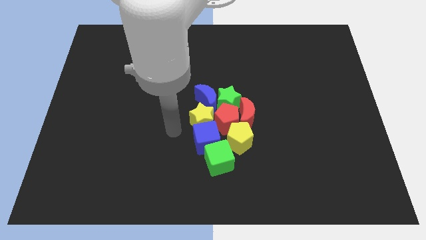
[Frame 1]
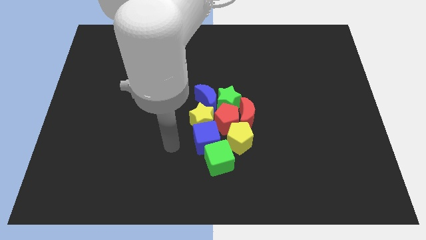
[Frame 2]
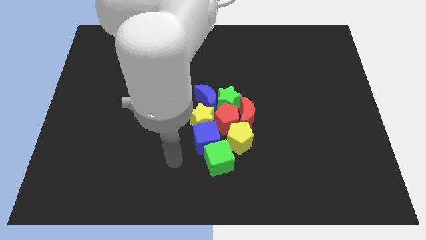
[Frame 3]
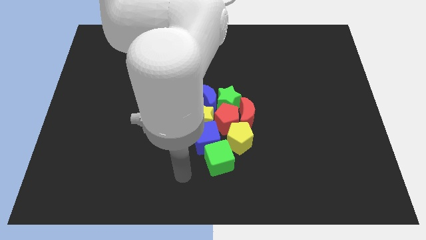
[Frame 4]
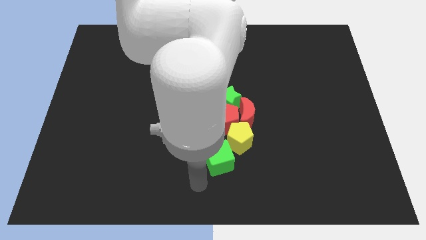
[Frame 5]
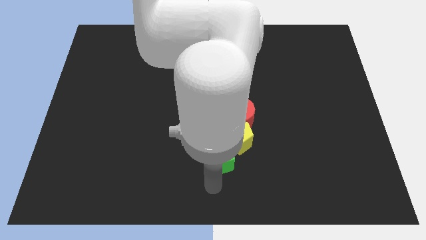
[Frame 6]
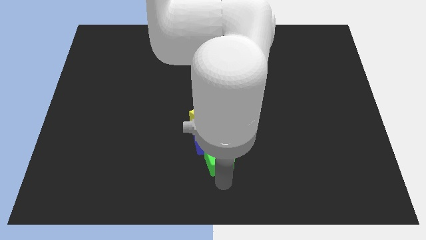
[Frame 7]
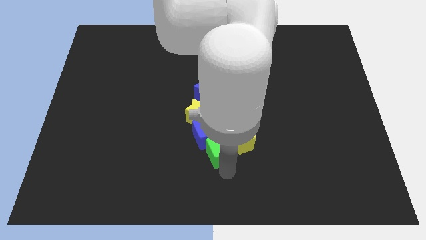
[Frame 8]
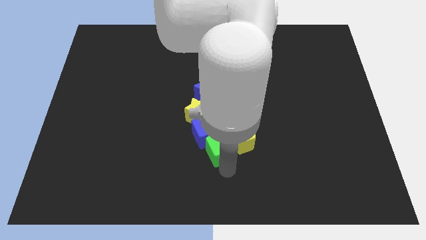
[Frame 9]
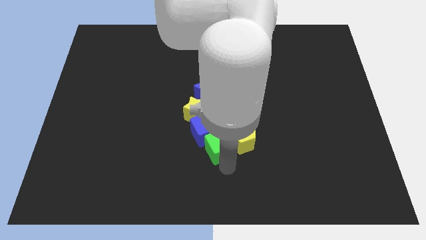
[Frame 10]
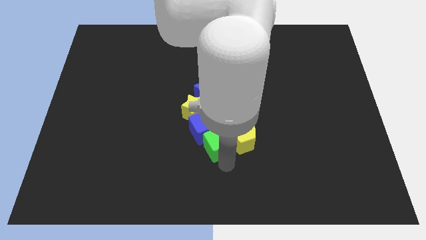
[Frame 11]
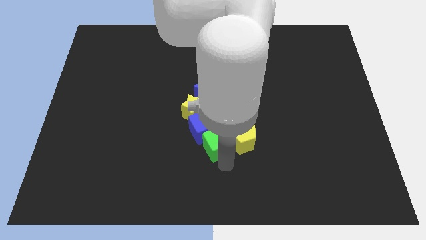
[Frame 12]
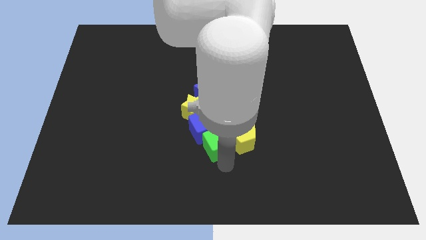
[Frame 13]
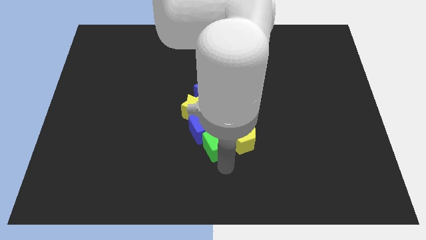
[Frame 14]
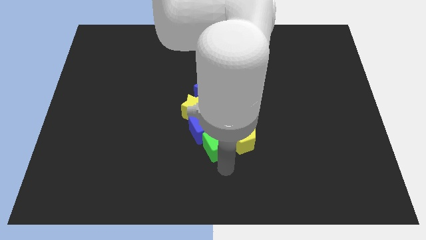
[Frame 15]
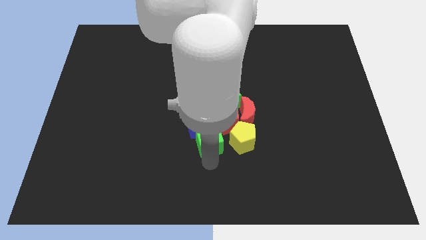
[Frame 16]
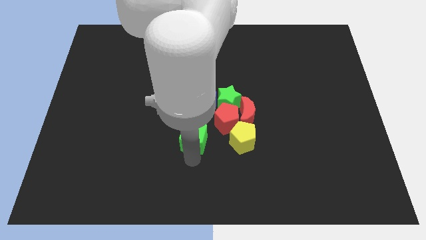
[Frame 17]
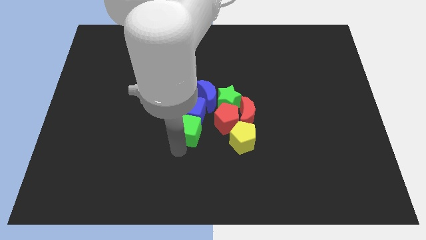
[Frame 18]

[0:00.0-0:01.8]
move the green cube into blue cube

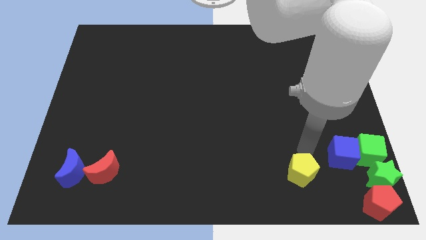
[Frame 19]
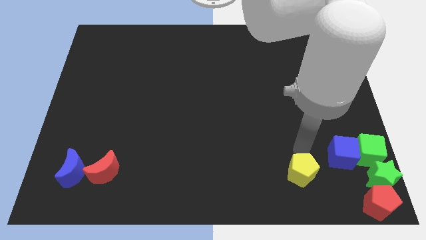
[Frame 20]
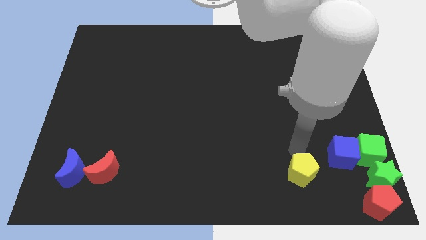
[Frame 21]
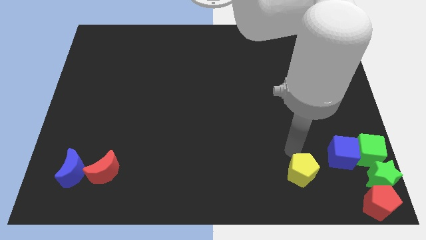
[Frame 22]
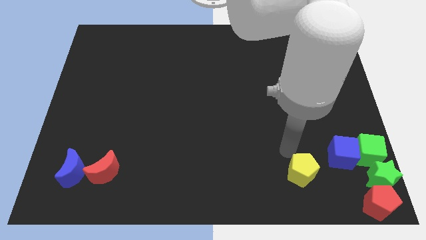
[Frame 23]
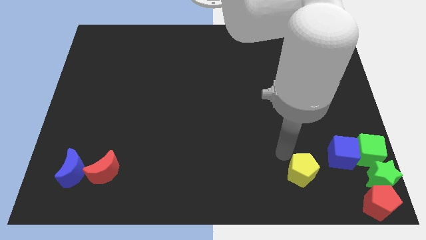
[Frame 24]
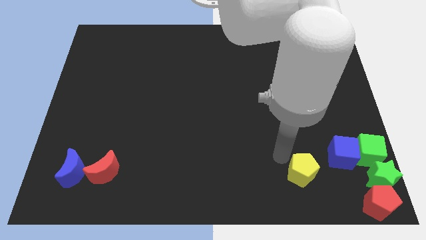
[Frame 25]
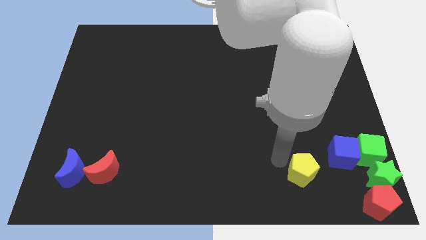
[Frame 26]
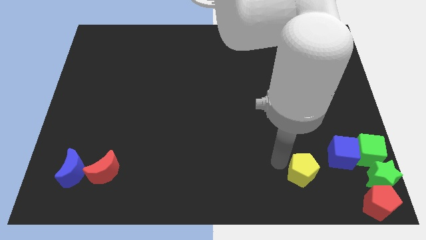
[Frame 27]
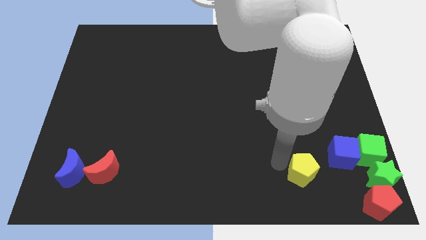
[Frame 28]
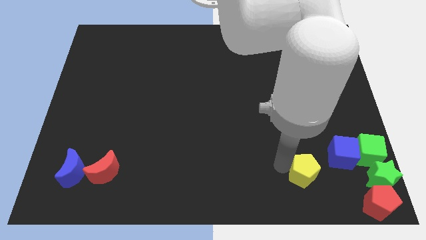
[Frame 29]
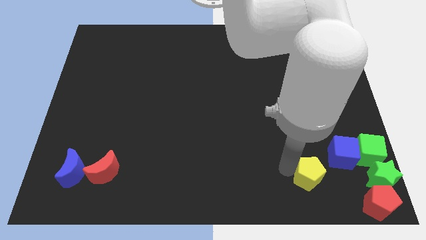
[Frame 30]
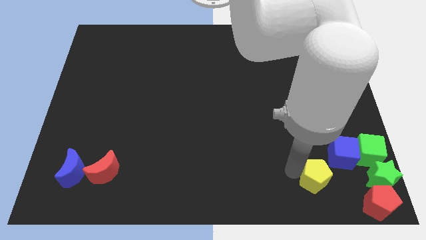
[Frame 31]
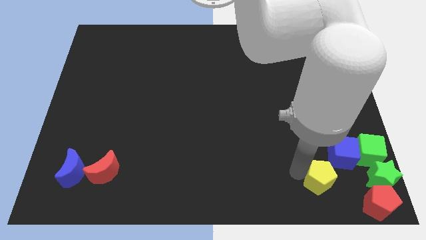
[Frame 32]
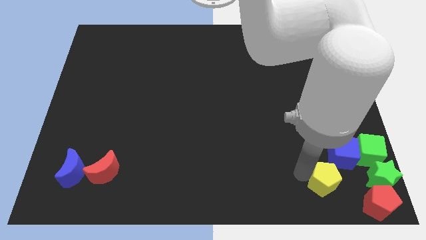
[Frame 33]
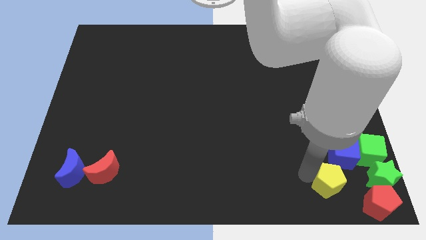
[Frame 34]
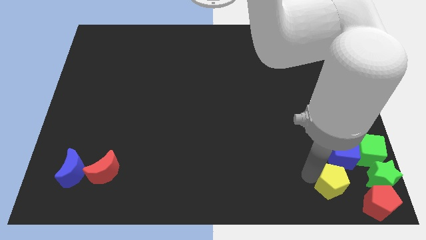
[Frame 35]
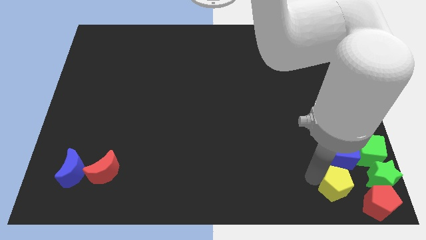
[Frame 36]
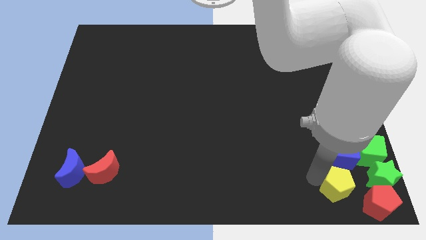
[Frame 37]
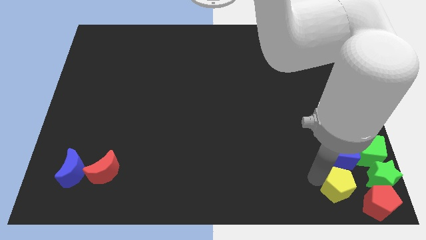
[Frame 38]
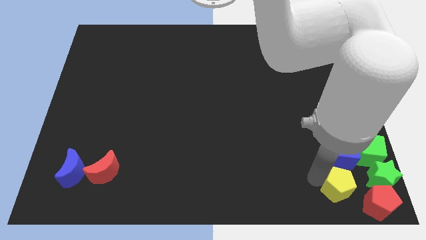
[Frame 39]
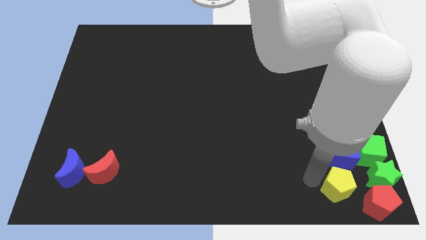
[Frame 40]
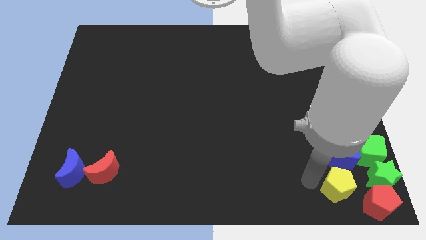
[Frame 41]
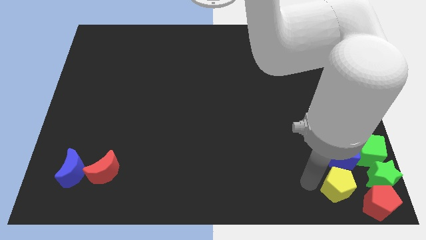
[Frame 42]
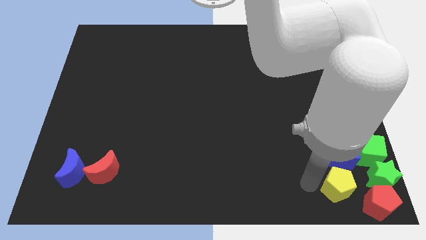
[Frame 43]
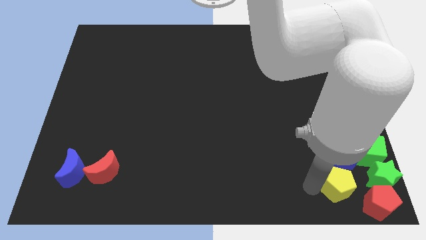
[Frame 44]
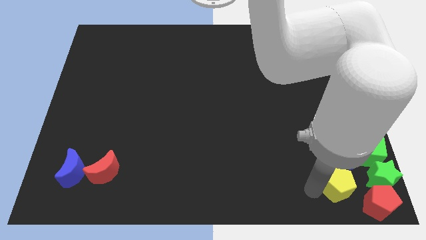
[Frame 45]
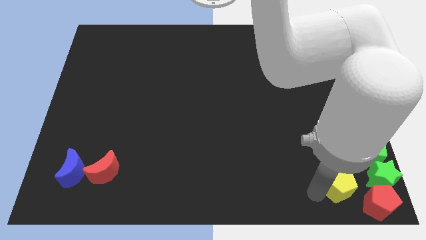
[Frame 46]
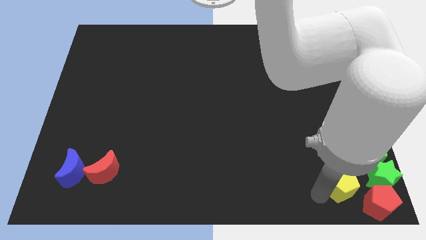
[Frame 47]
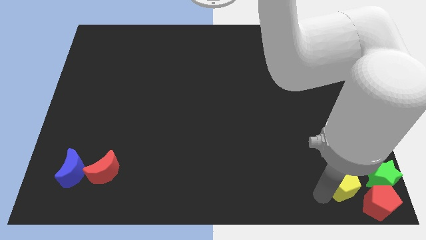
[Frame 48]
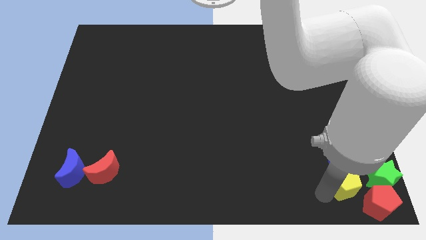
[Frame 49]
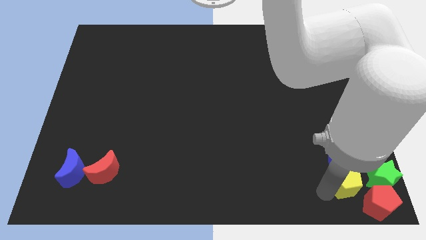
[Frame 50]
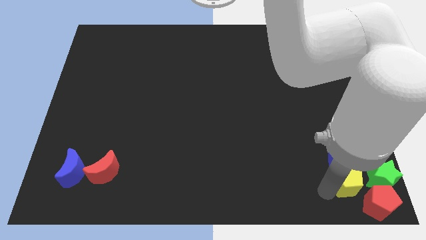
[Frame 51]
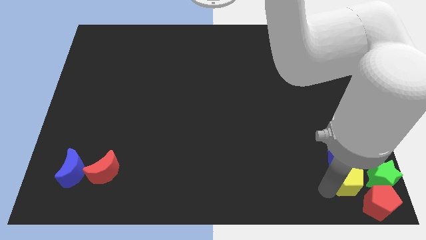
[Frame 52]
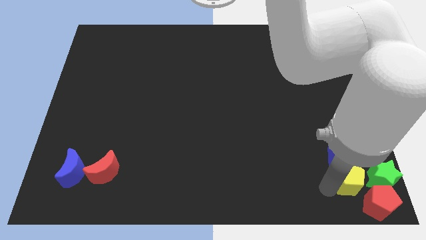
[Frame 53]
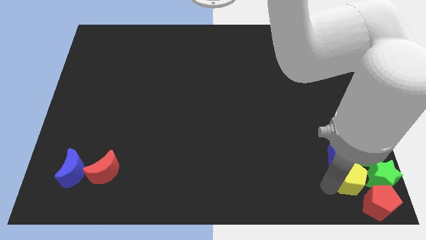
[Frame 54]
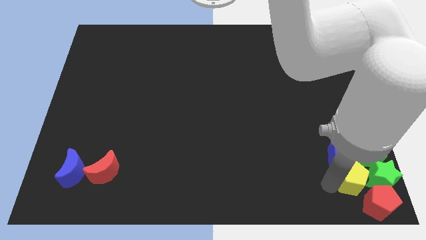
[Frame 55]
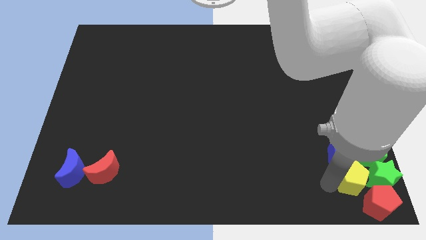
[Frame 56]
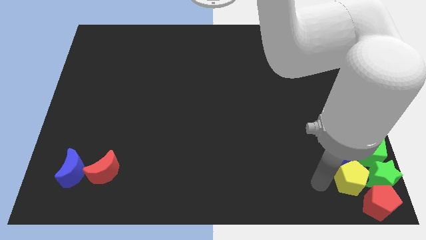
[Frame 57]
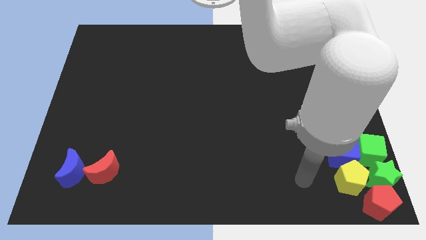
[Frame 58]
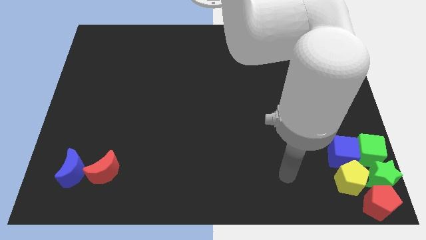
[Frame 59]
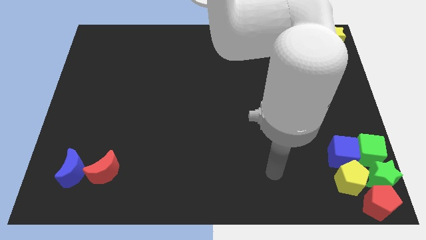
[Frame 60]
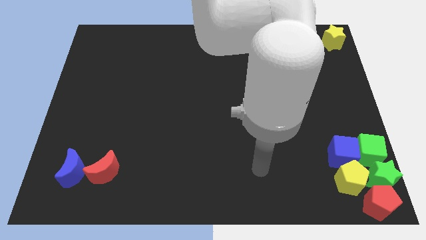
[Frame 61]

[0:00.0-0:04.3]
push the yellow pentagon into the group of blocks at the bottom right

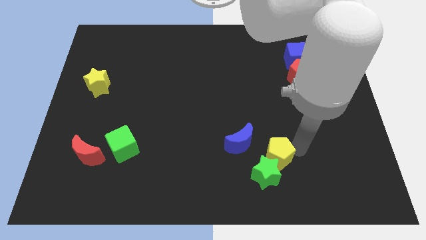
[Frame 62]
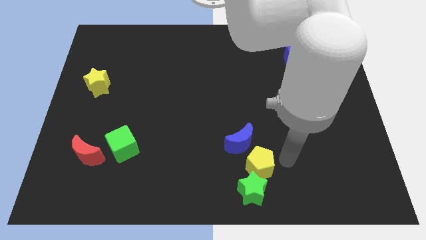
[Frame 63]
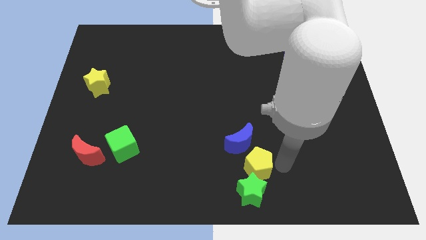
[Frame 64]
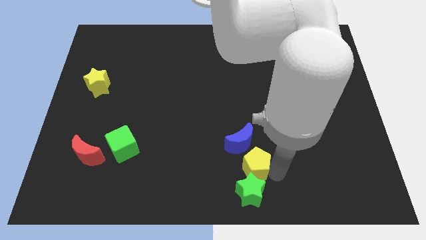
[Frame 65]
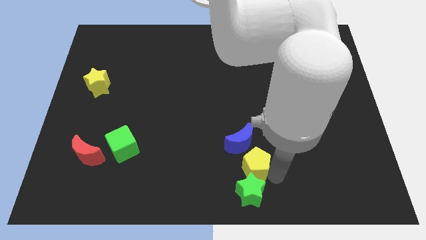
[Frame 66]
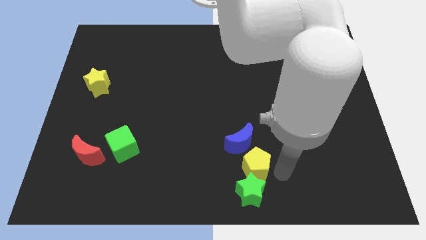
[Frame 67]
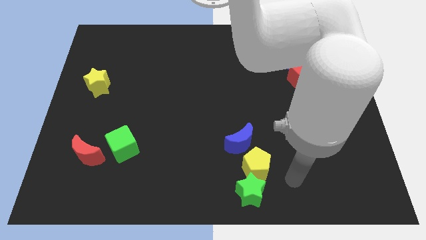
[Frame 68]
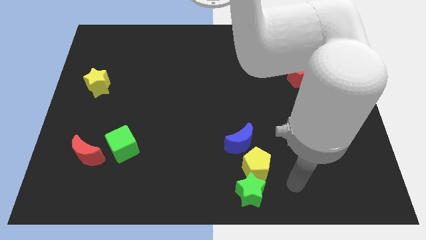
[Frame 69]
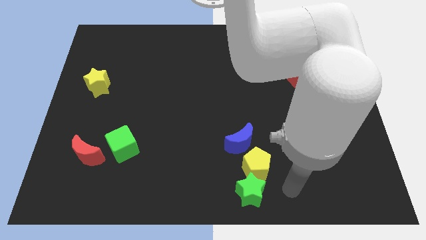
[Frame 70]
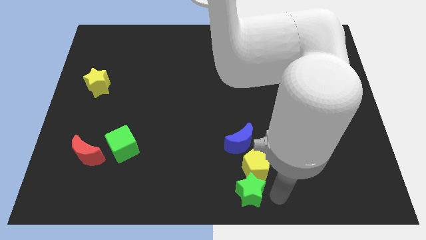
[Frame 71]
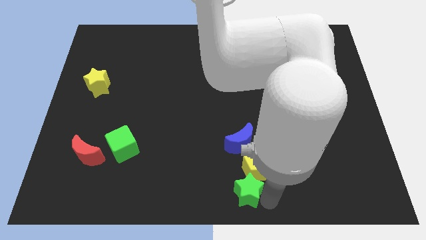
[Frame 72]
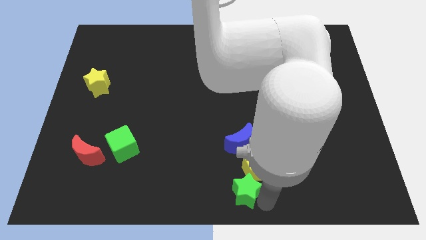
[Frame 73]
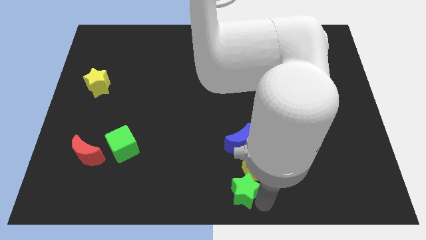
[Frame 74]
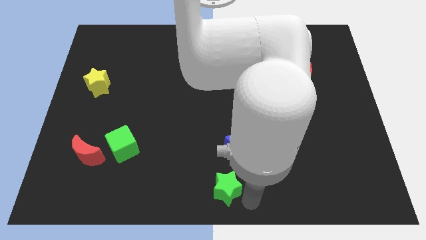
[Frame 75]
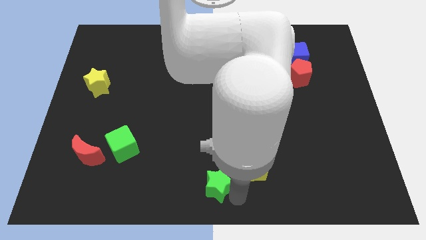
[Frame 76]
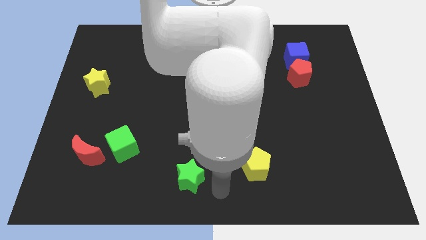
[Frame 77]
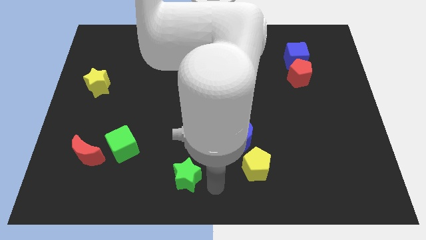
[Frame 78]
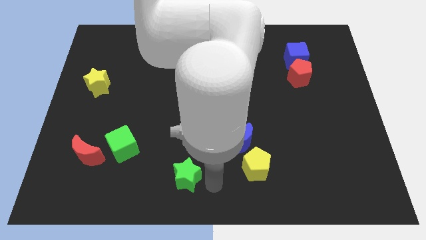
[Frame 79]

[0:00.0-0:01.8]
separate green star from yellow pentagon

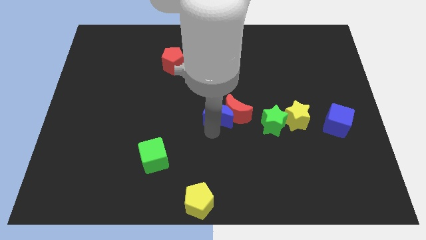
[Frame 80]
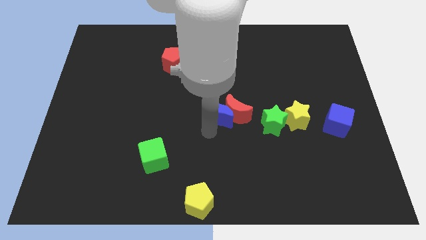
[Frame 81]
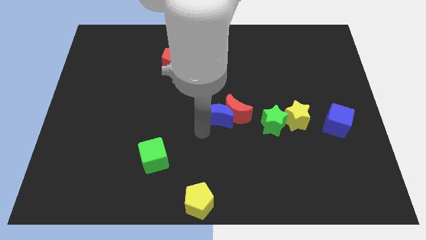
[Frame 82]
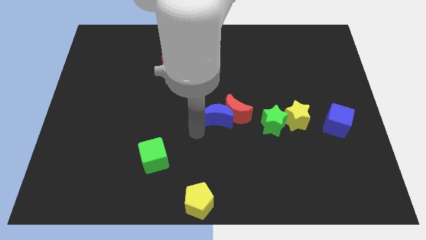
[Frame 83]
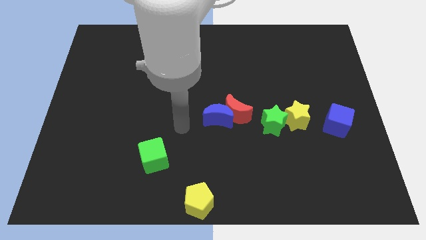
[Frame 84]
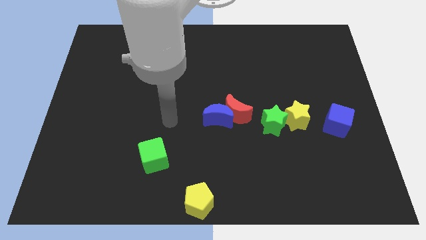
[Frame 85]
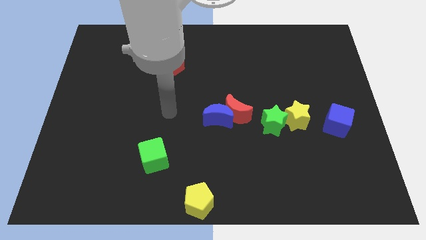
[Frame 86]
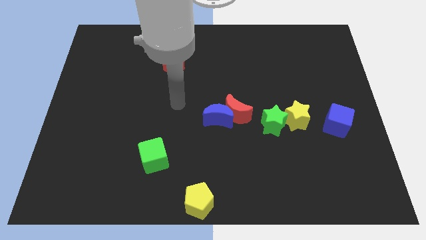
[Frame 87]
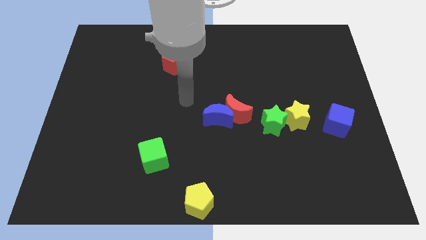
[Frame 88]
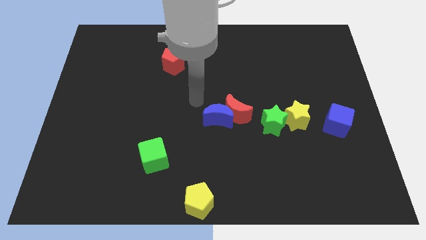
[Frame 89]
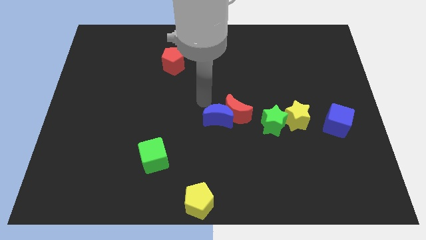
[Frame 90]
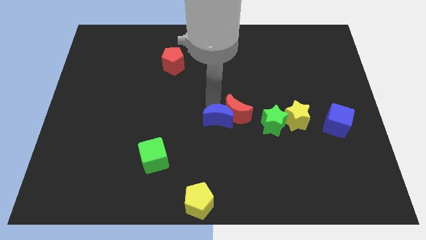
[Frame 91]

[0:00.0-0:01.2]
place the arm above the blue crescent
